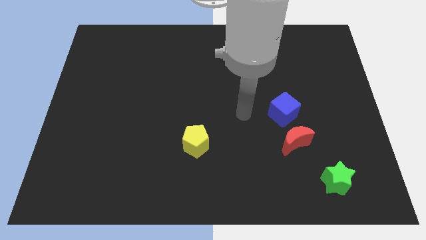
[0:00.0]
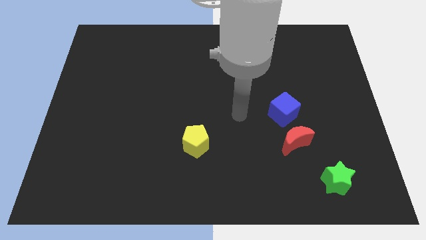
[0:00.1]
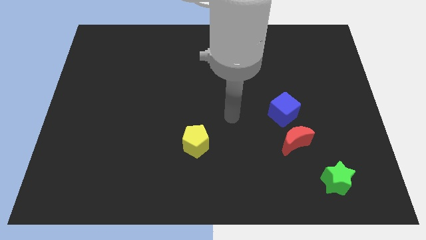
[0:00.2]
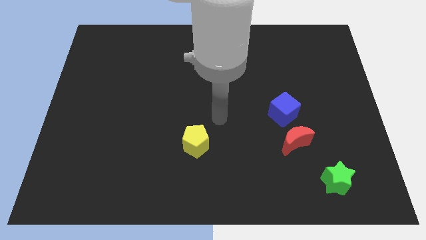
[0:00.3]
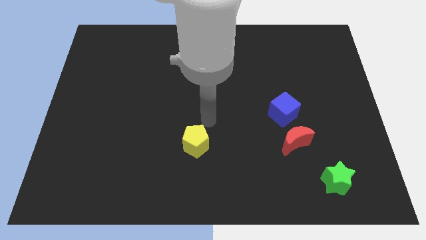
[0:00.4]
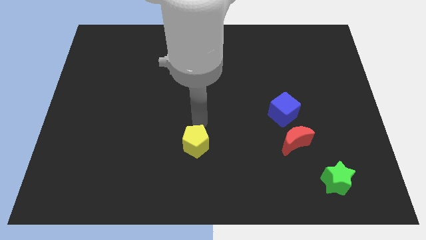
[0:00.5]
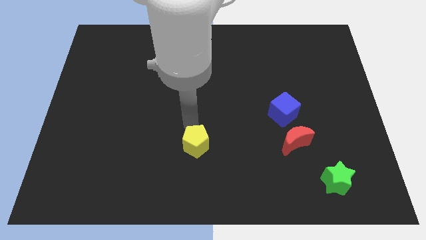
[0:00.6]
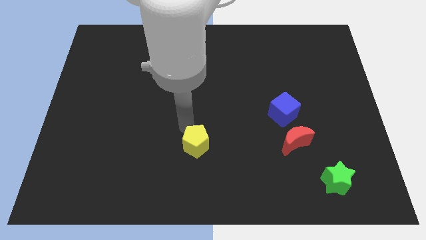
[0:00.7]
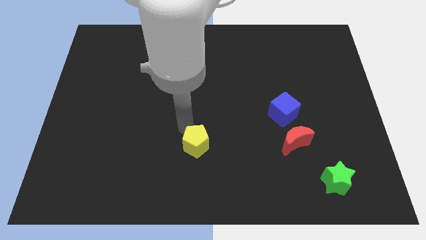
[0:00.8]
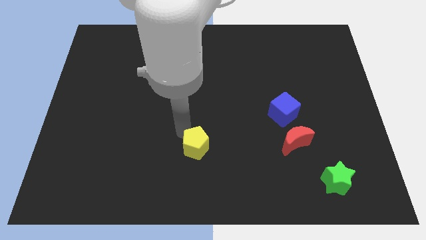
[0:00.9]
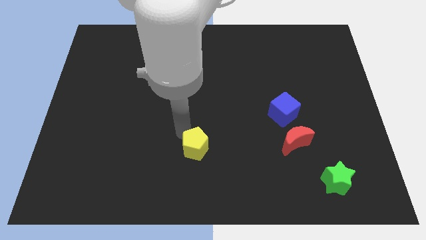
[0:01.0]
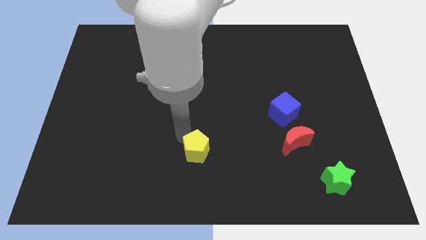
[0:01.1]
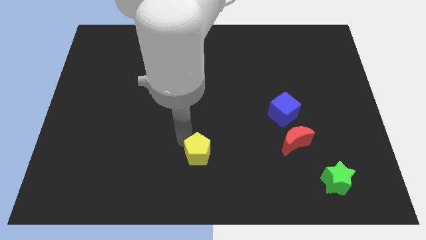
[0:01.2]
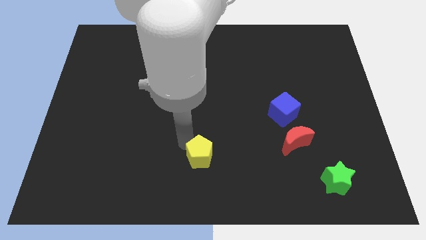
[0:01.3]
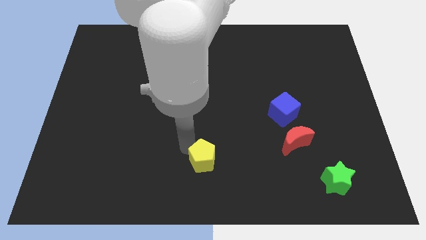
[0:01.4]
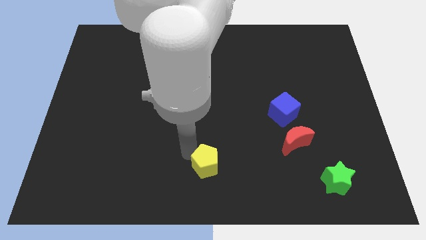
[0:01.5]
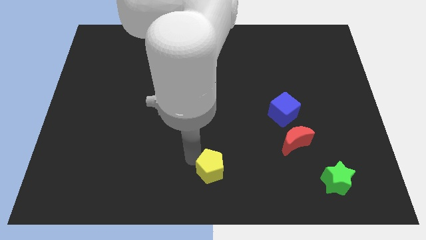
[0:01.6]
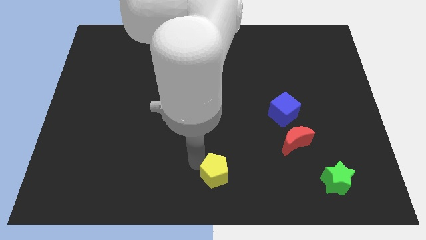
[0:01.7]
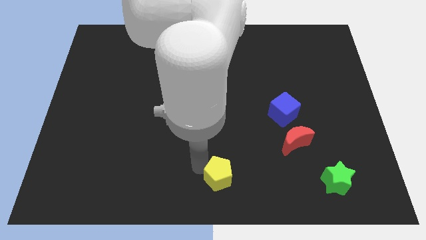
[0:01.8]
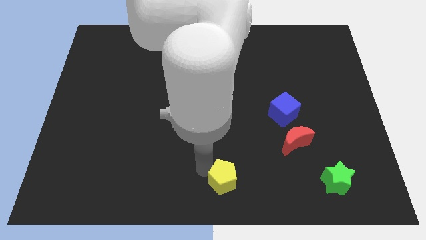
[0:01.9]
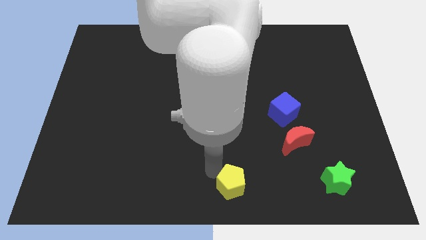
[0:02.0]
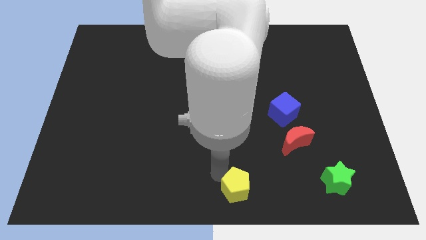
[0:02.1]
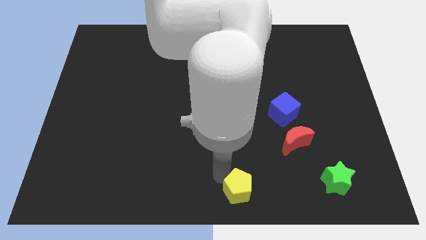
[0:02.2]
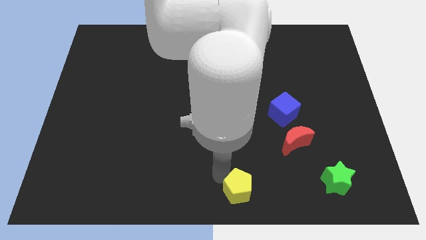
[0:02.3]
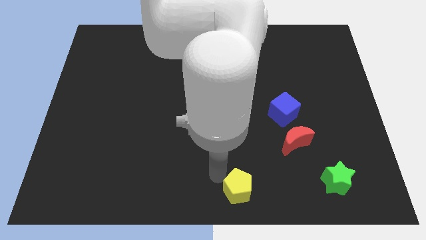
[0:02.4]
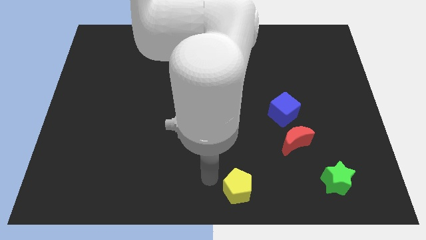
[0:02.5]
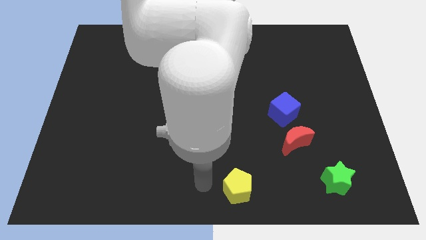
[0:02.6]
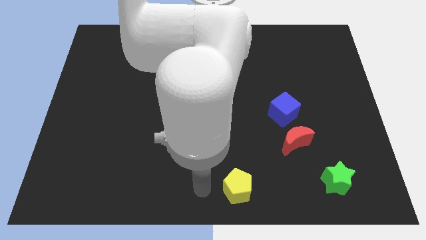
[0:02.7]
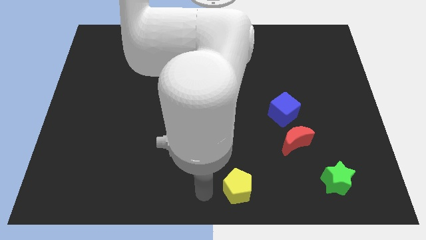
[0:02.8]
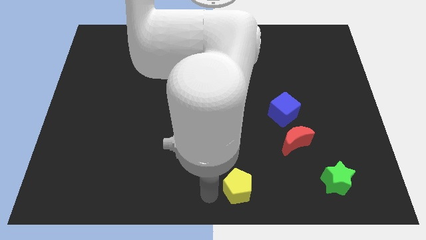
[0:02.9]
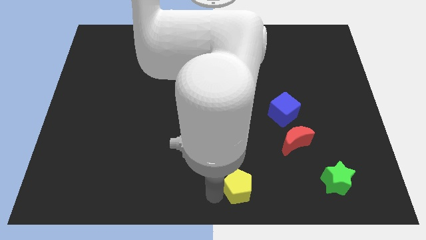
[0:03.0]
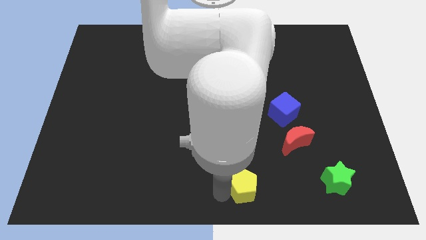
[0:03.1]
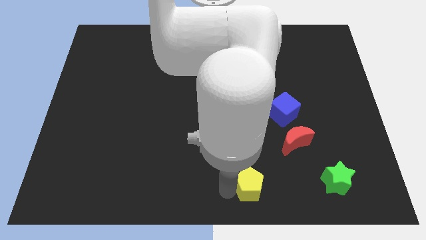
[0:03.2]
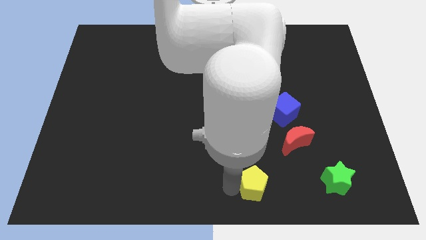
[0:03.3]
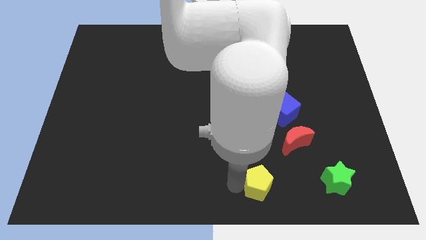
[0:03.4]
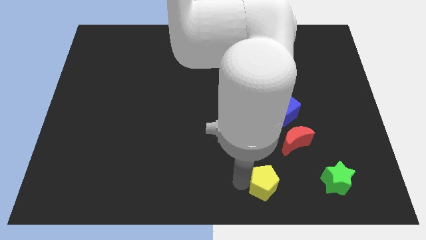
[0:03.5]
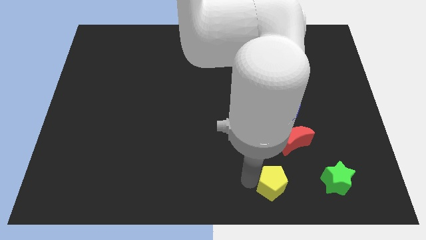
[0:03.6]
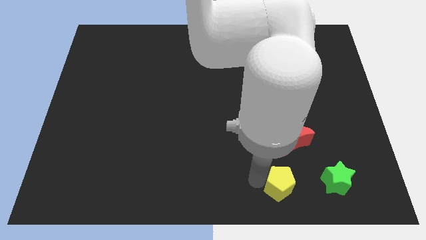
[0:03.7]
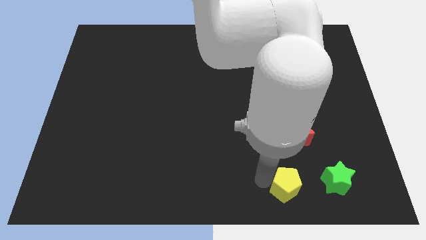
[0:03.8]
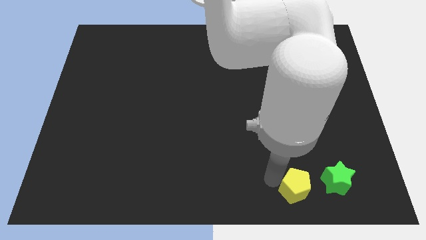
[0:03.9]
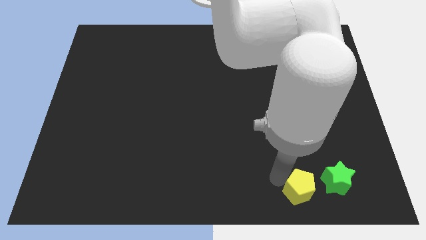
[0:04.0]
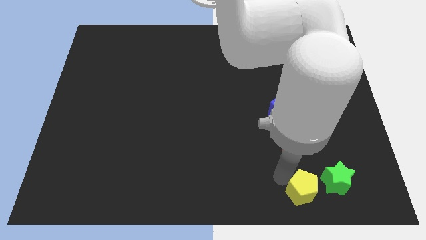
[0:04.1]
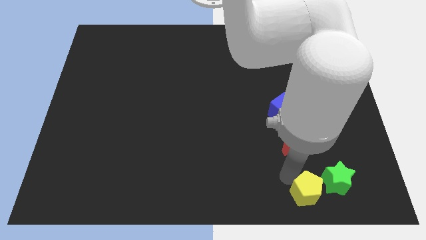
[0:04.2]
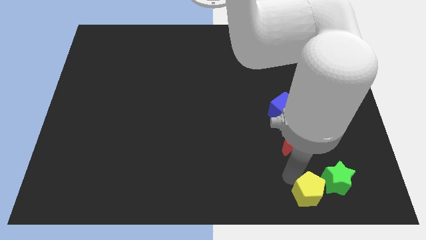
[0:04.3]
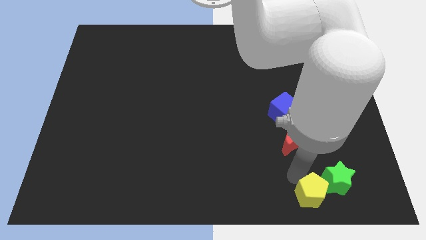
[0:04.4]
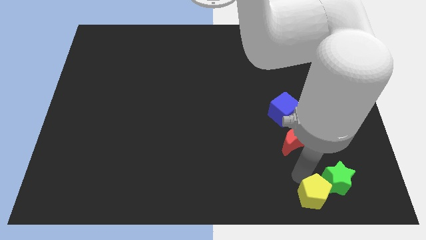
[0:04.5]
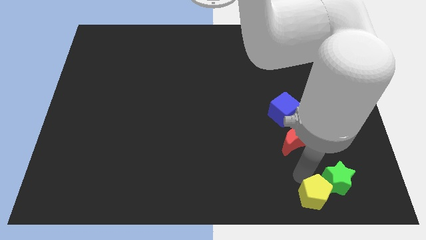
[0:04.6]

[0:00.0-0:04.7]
put the pentagon next to the green star

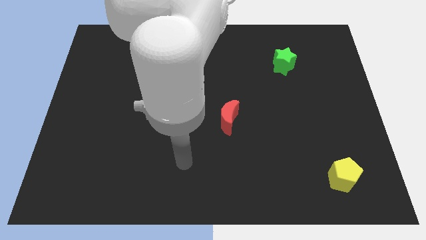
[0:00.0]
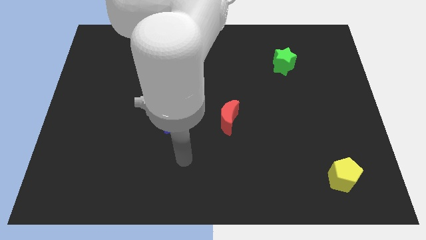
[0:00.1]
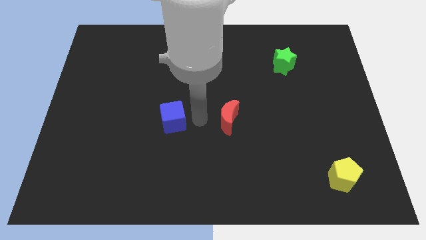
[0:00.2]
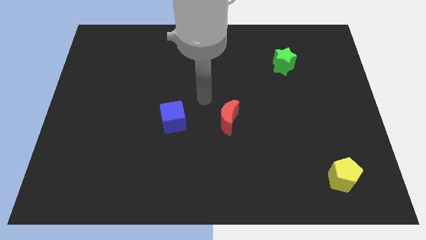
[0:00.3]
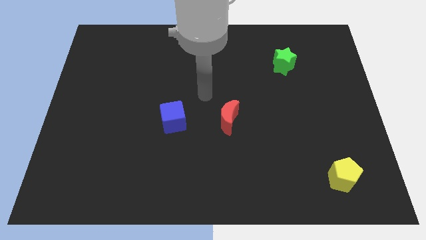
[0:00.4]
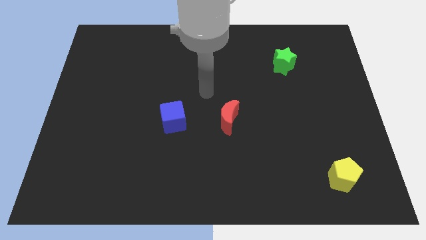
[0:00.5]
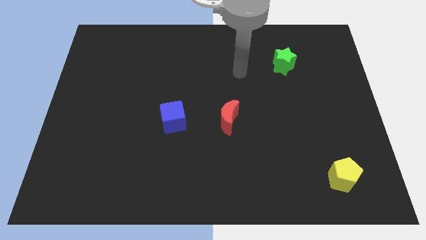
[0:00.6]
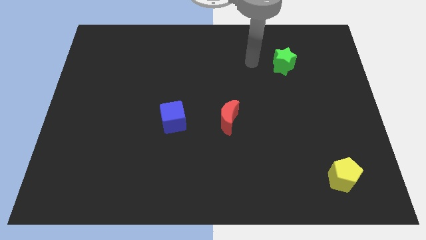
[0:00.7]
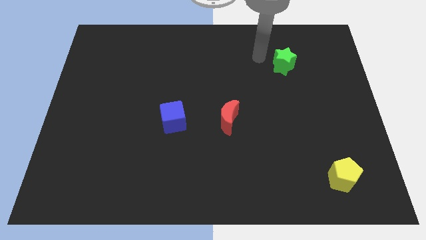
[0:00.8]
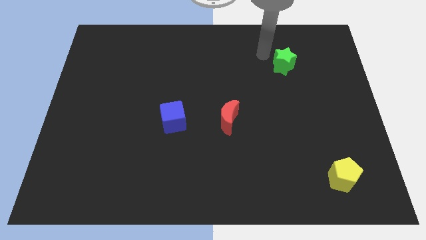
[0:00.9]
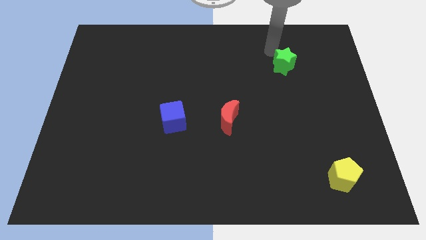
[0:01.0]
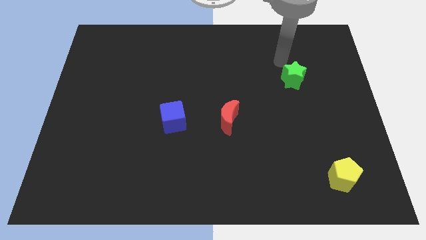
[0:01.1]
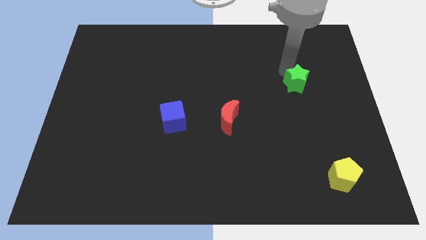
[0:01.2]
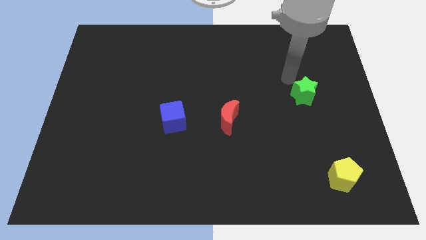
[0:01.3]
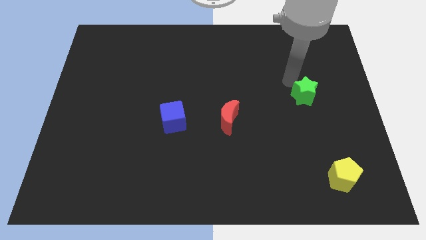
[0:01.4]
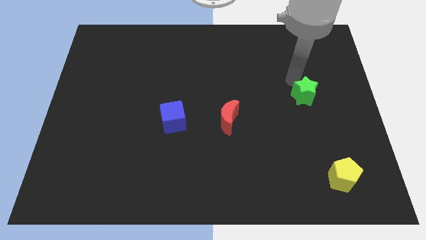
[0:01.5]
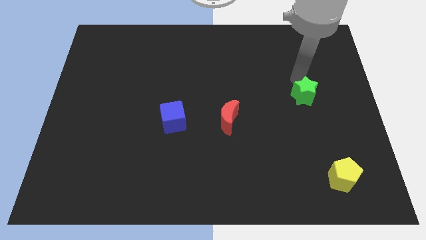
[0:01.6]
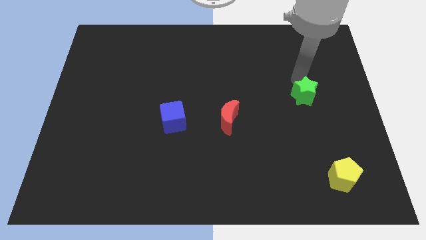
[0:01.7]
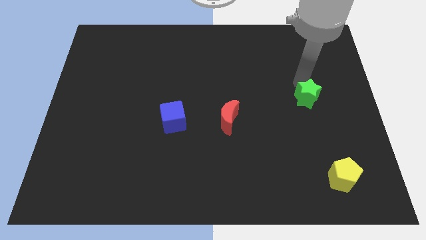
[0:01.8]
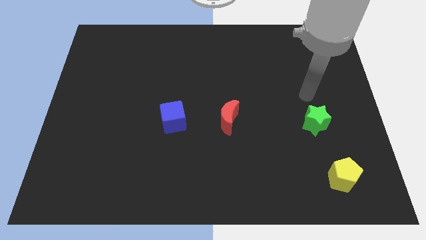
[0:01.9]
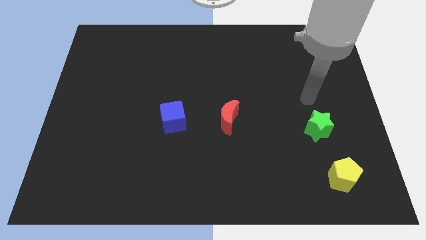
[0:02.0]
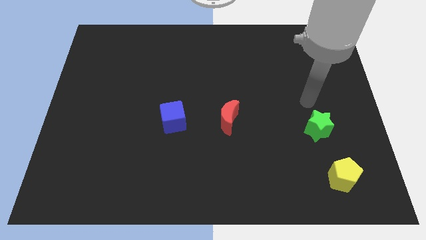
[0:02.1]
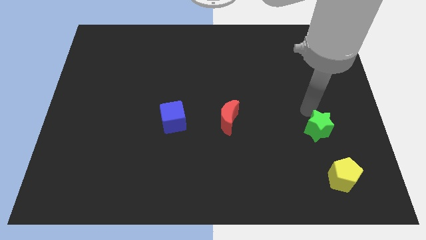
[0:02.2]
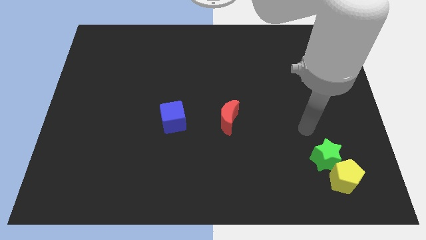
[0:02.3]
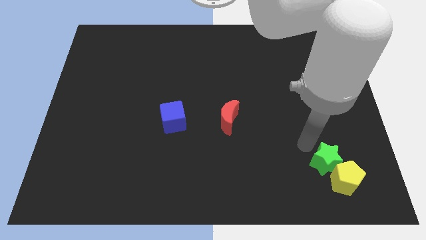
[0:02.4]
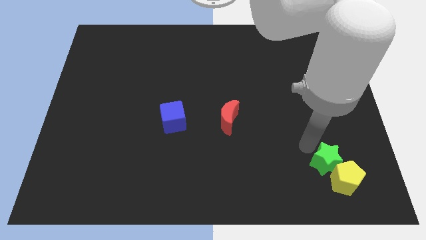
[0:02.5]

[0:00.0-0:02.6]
put the green star towards the yellow block

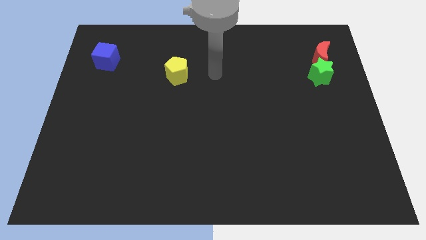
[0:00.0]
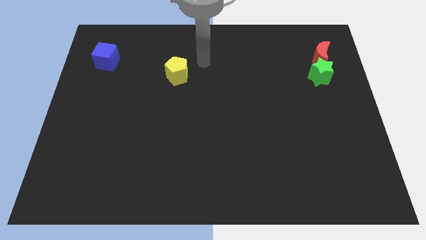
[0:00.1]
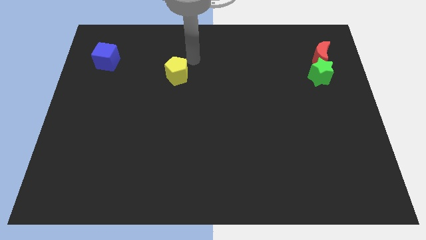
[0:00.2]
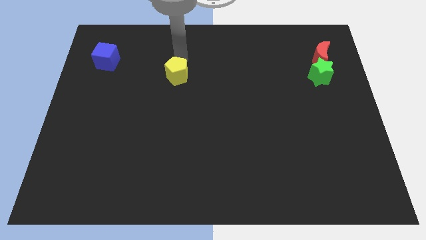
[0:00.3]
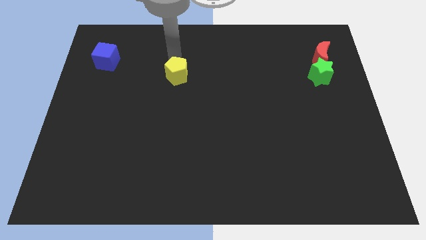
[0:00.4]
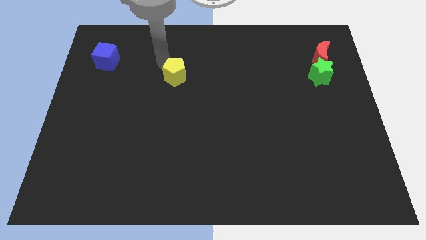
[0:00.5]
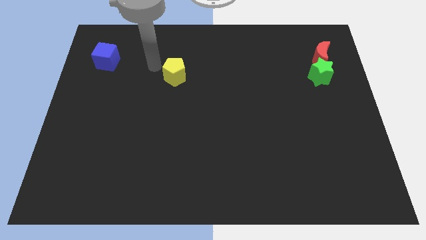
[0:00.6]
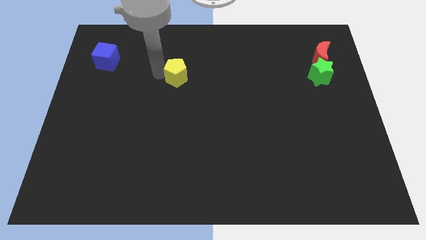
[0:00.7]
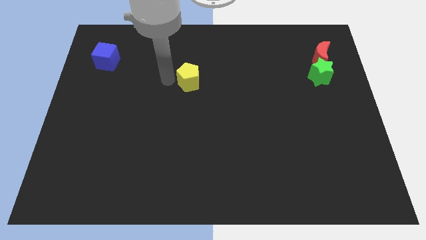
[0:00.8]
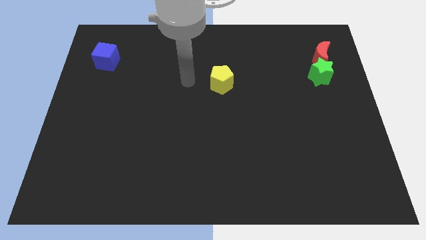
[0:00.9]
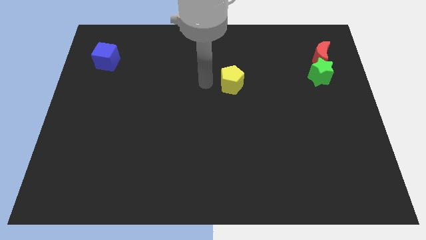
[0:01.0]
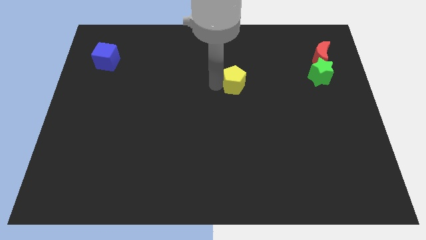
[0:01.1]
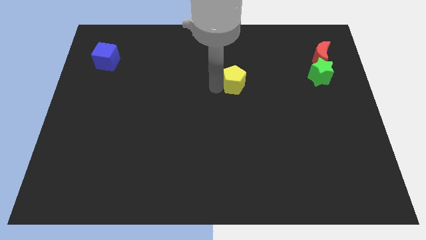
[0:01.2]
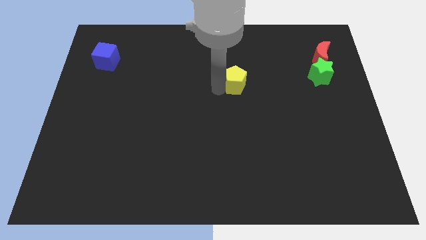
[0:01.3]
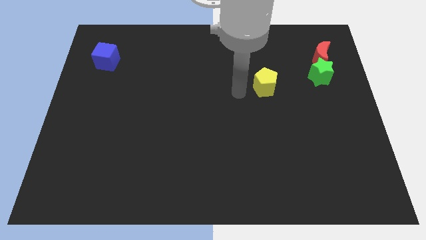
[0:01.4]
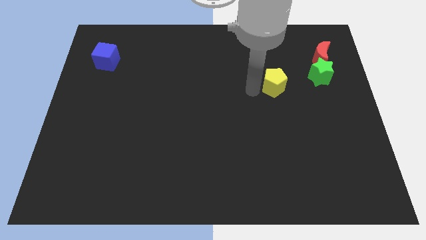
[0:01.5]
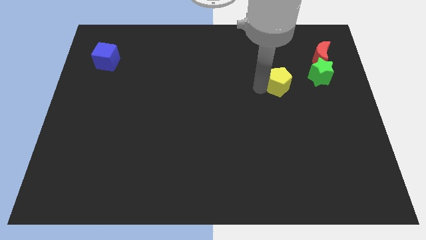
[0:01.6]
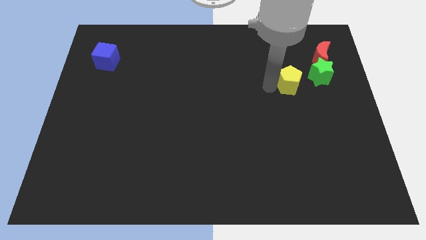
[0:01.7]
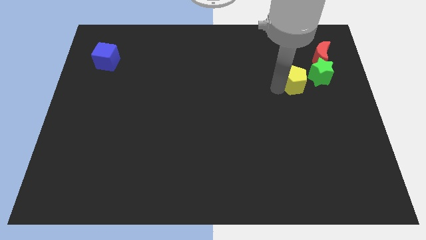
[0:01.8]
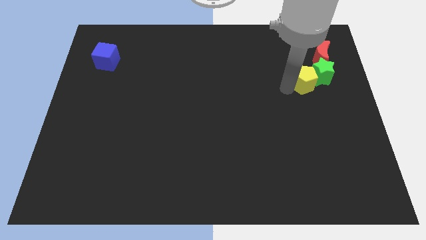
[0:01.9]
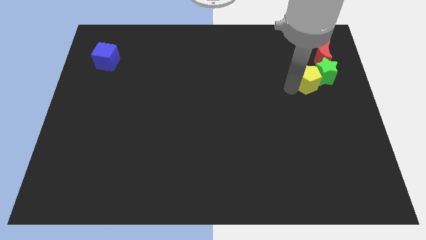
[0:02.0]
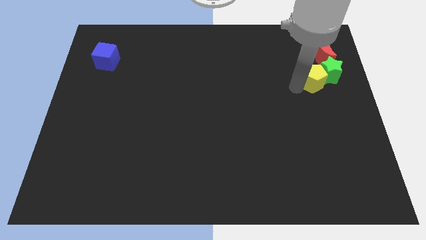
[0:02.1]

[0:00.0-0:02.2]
slide the yellow block towards the green block
